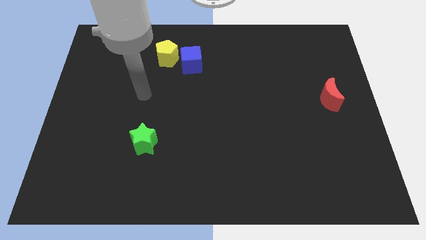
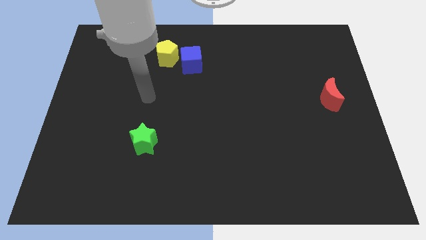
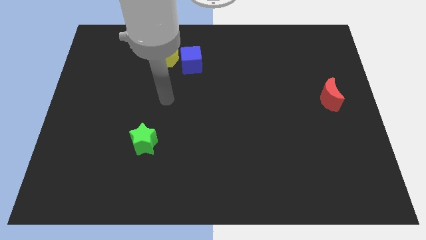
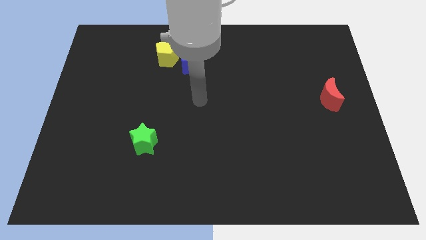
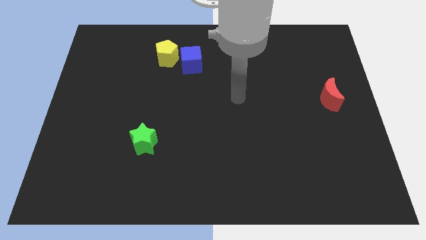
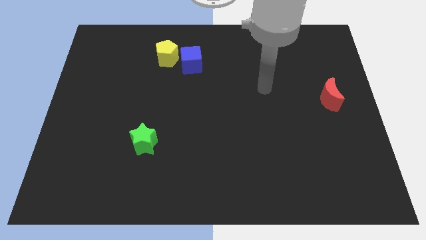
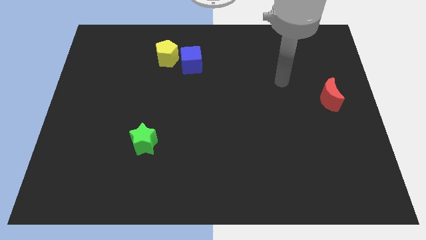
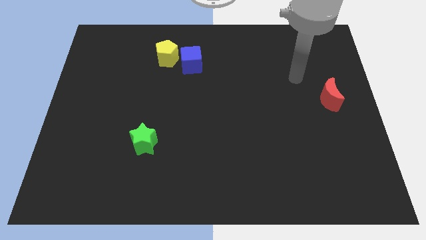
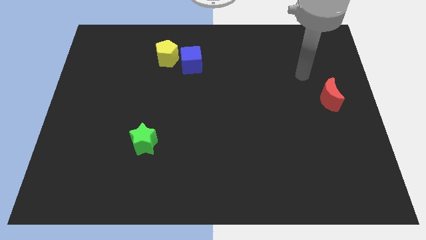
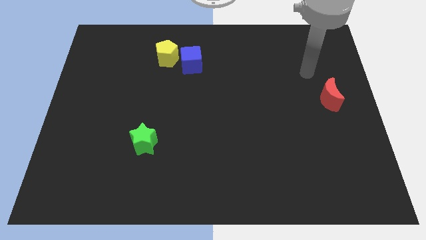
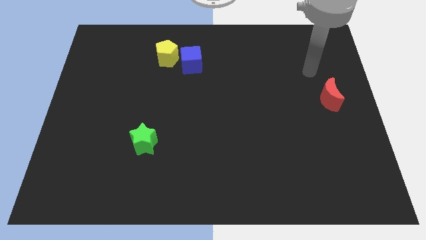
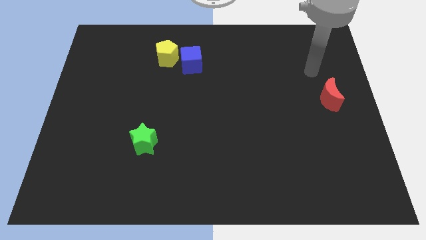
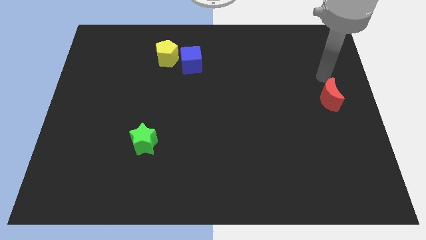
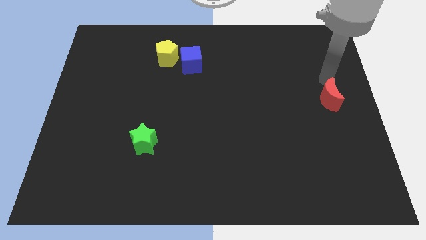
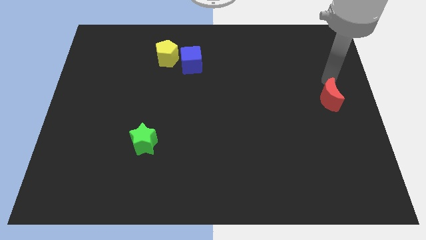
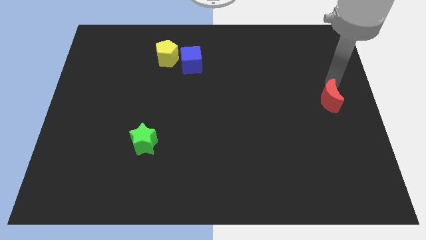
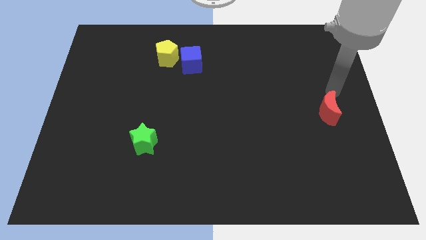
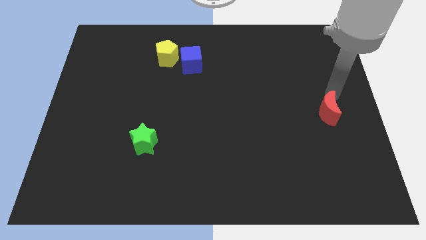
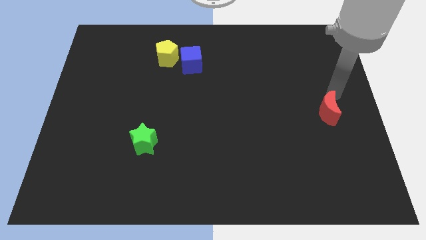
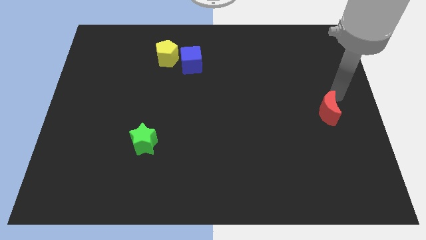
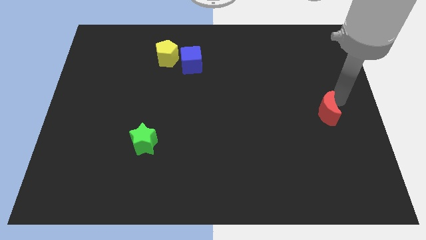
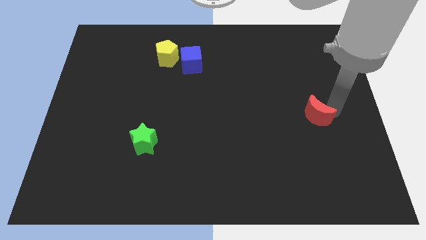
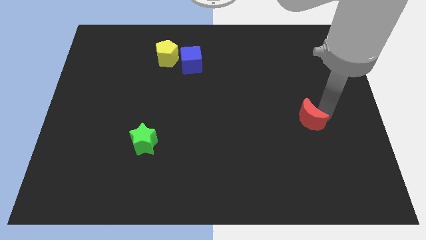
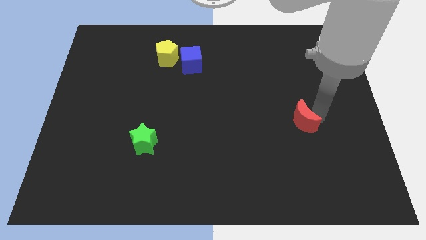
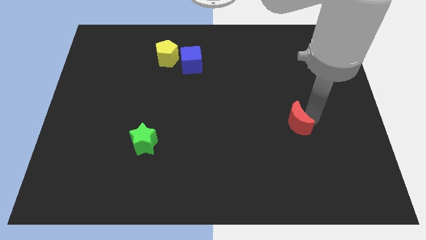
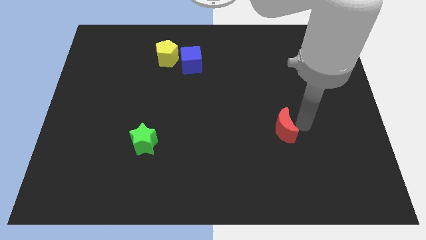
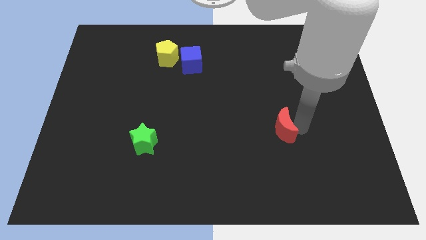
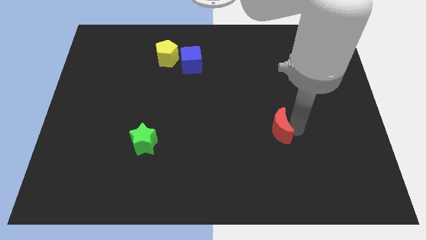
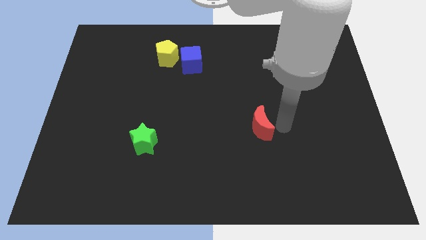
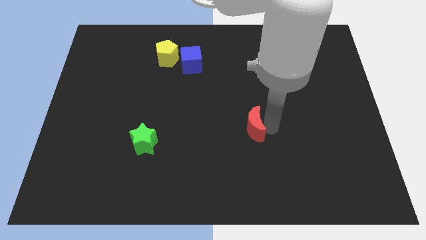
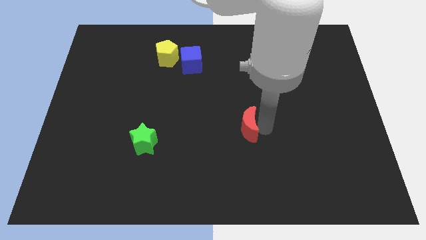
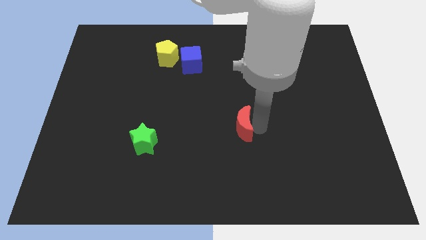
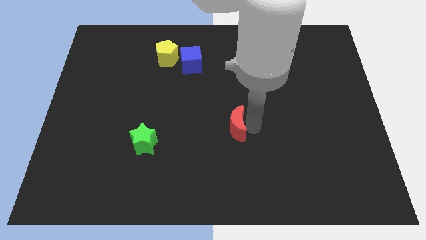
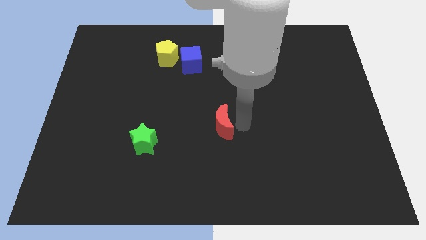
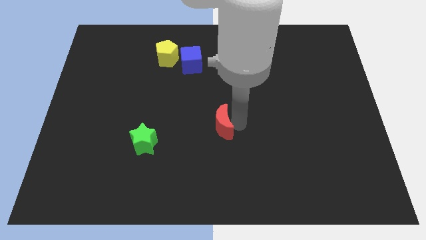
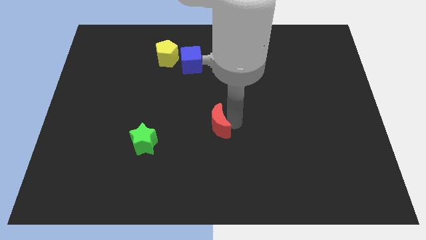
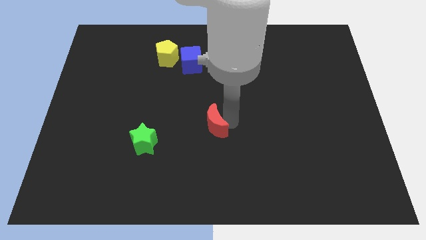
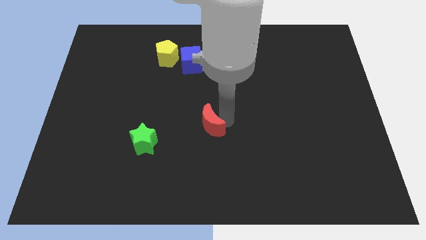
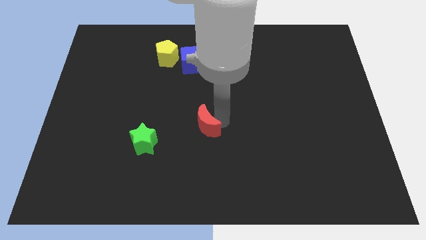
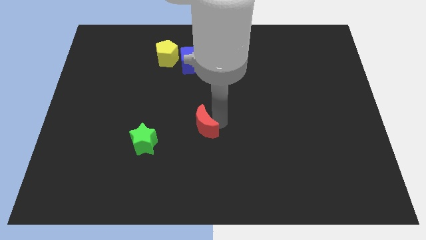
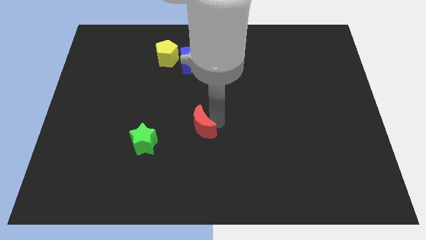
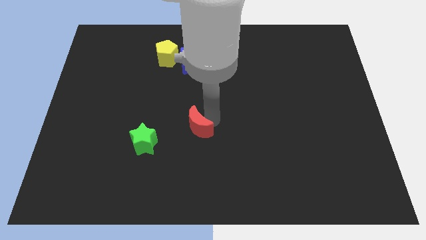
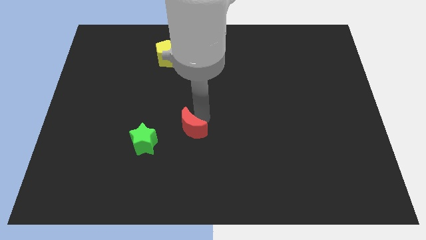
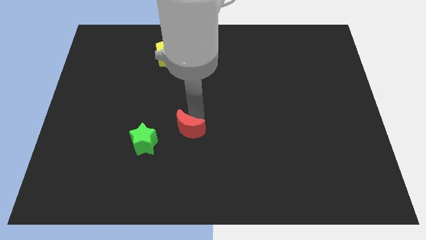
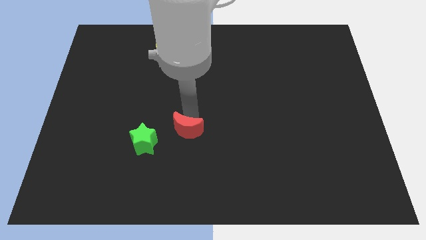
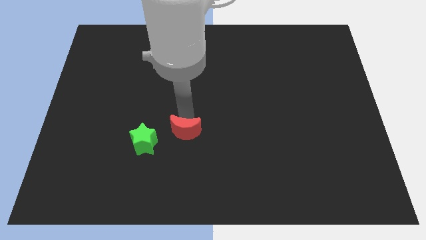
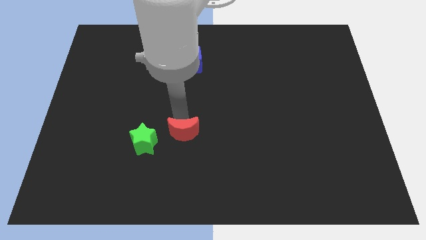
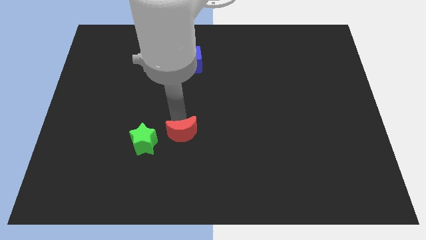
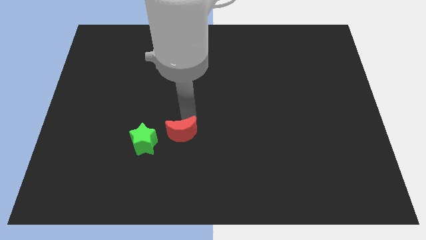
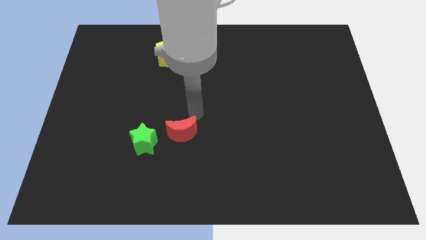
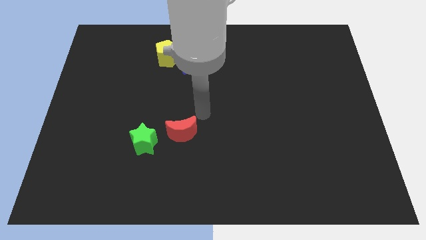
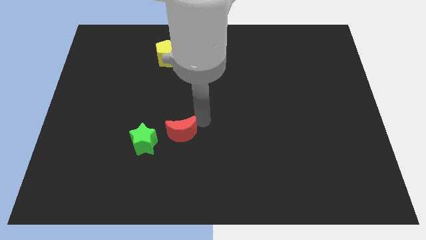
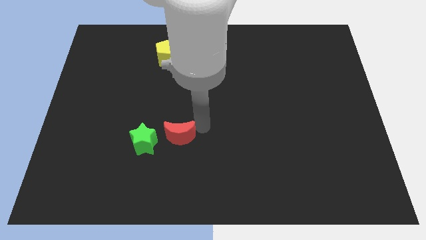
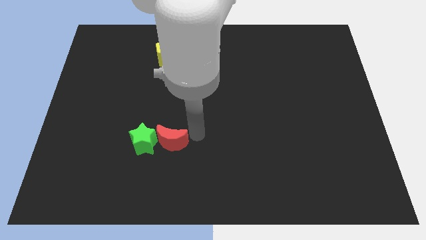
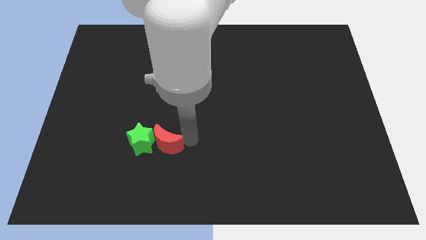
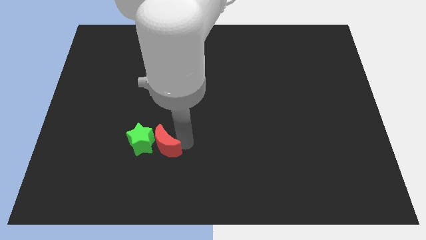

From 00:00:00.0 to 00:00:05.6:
move the red moon towards the green star

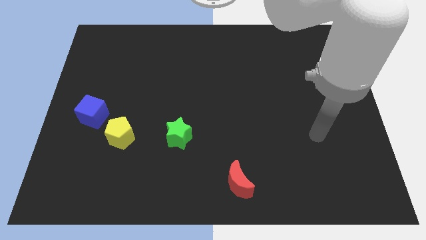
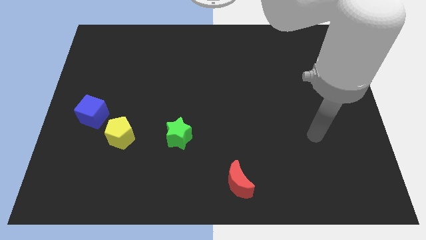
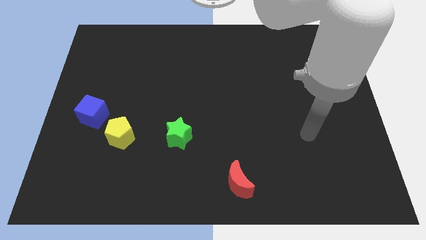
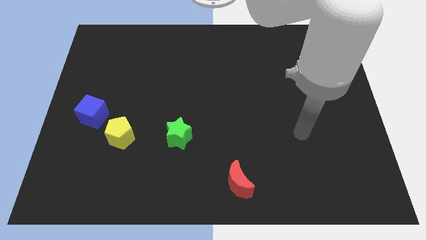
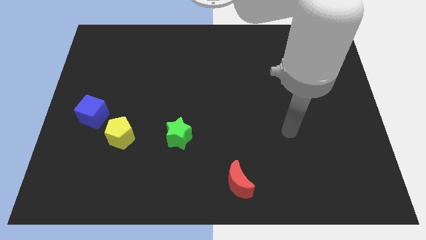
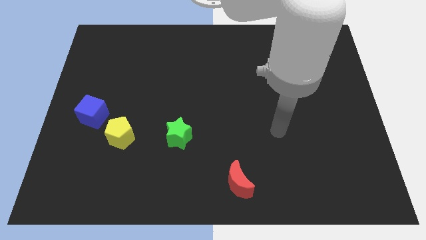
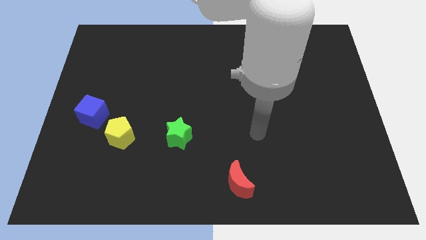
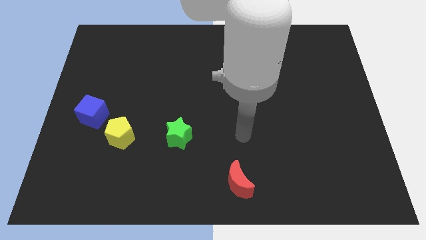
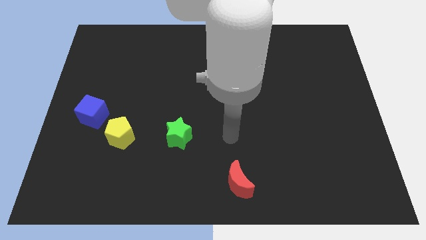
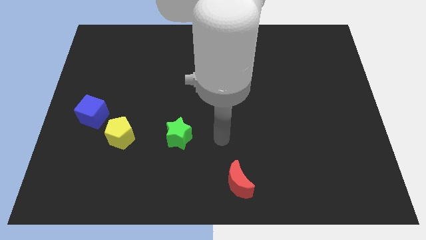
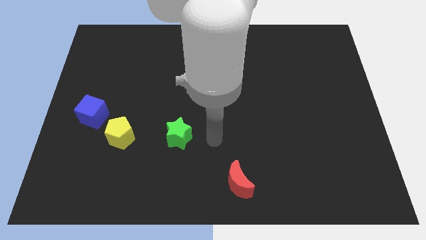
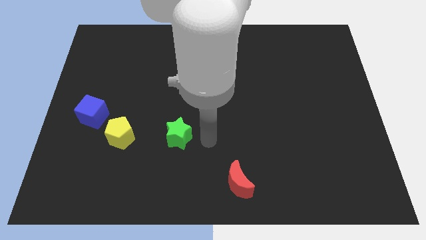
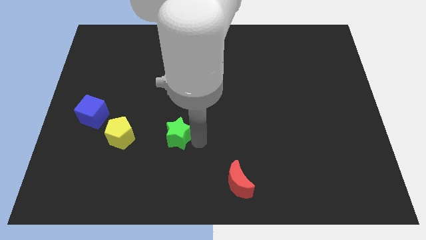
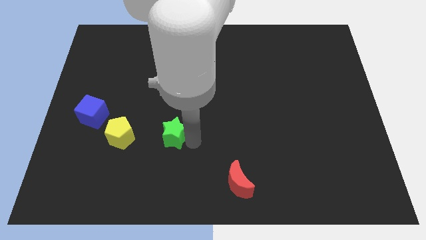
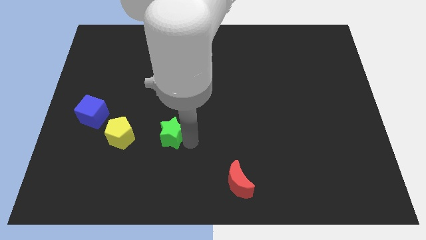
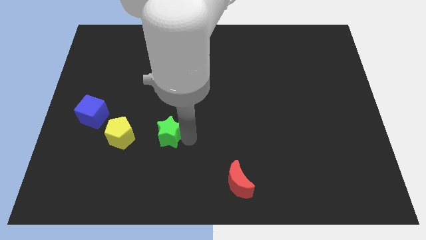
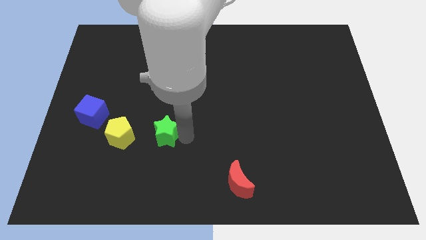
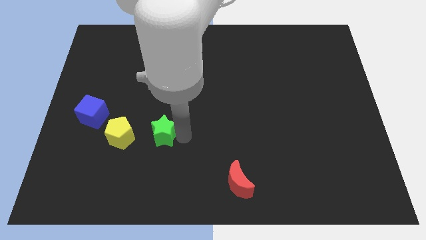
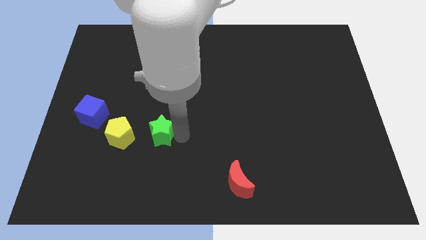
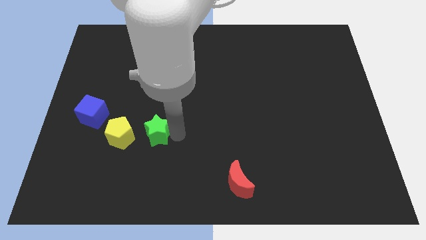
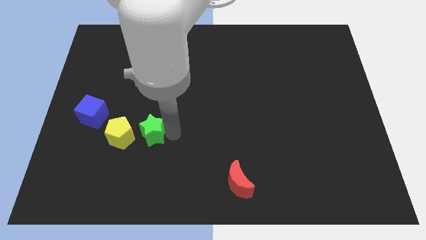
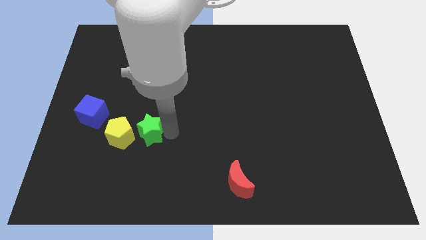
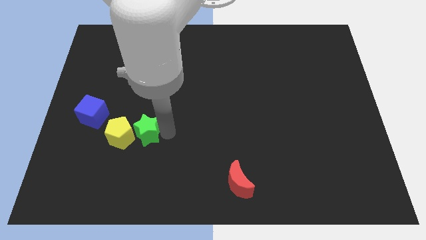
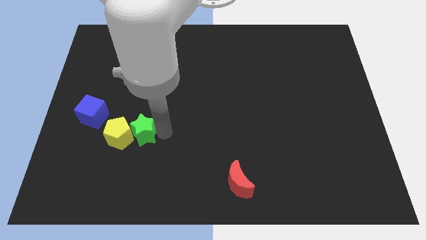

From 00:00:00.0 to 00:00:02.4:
push the star towards the yellow block

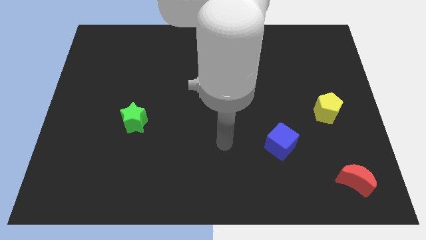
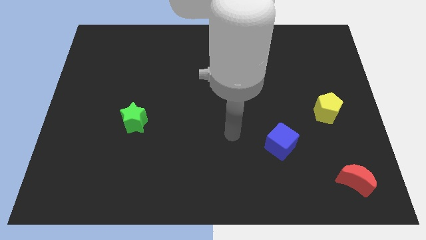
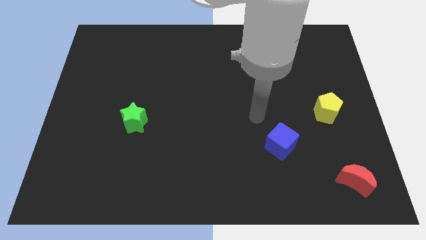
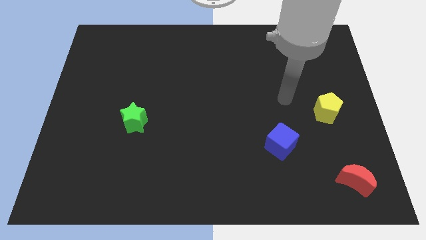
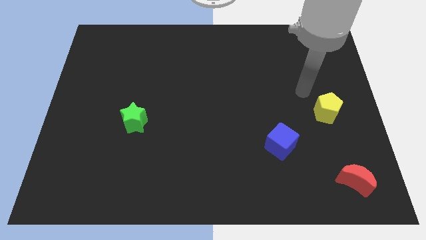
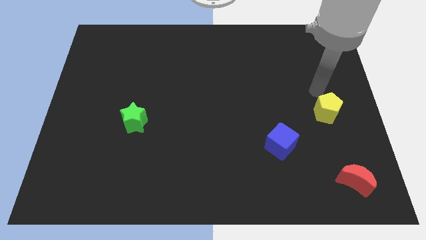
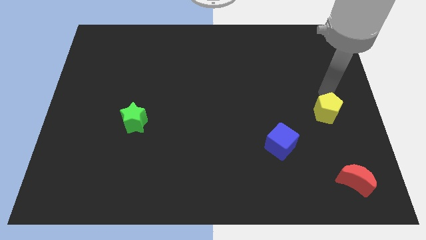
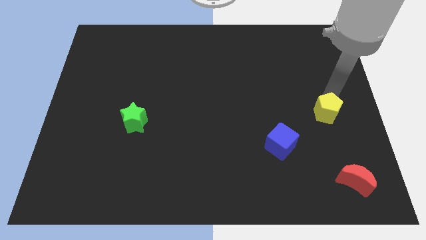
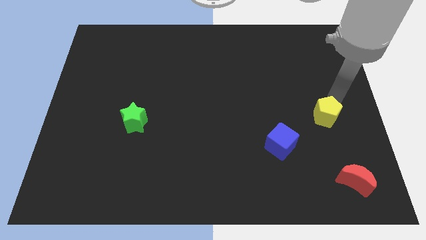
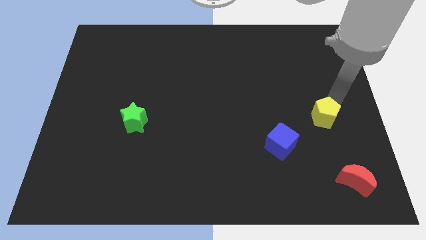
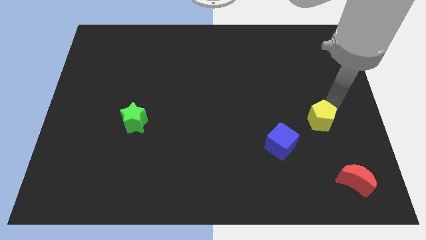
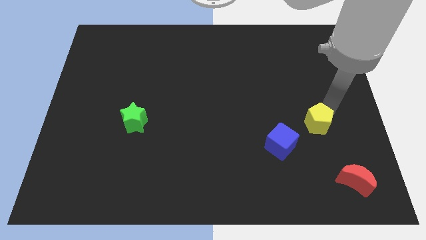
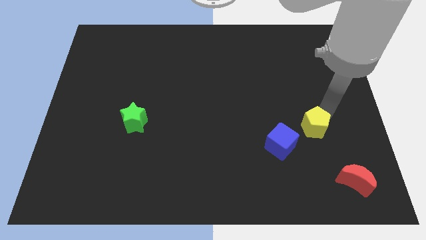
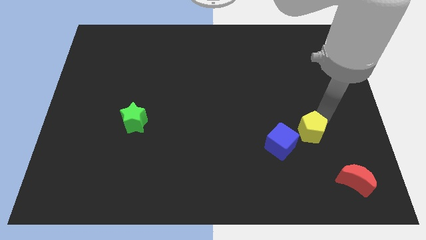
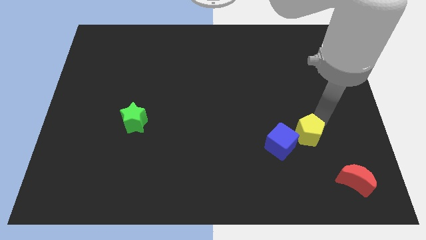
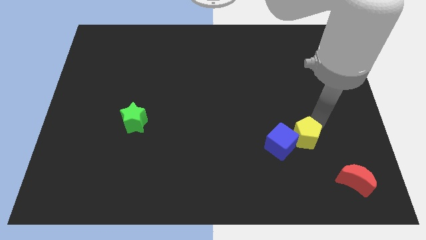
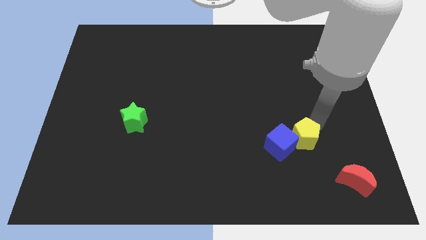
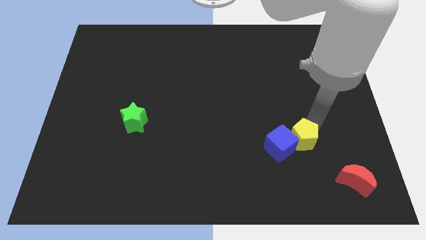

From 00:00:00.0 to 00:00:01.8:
move the yellow pentagon close to the blue cube
